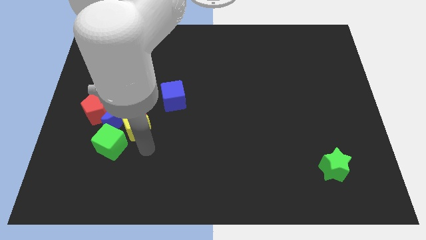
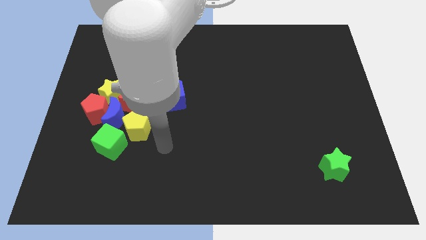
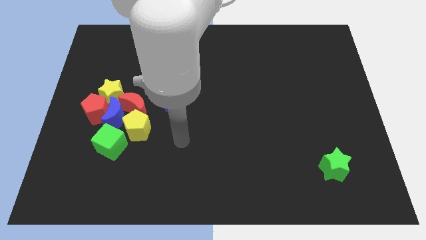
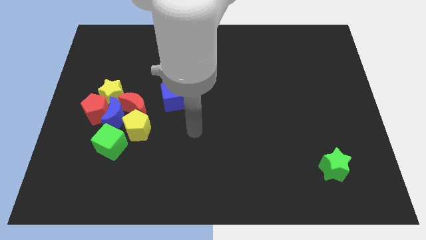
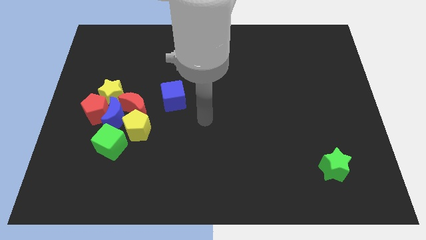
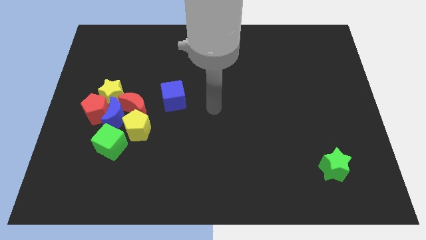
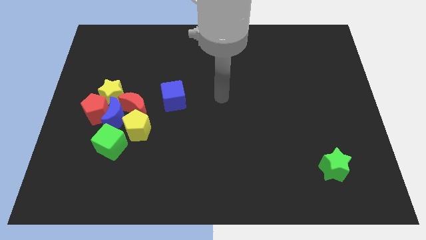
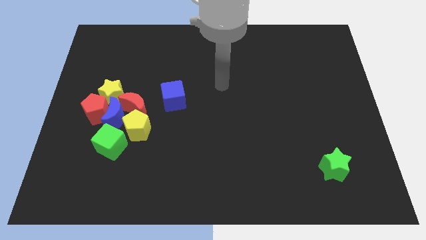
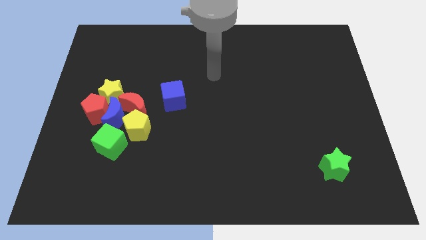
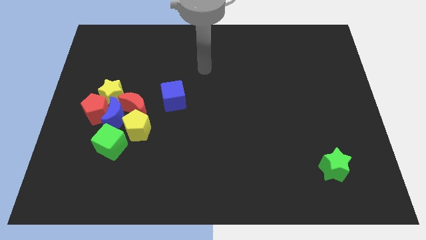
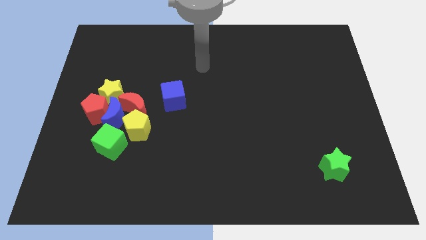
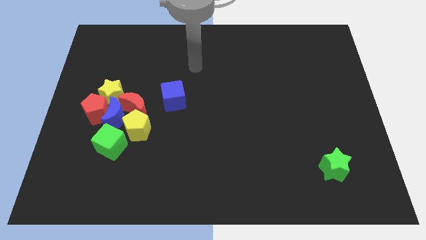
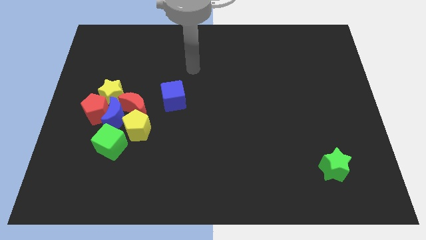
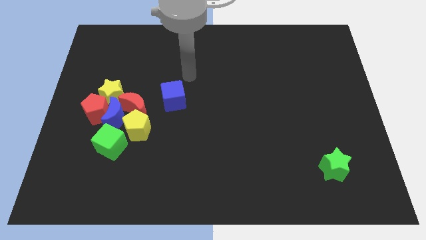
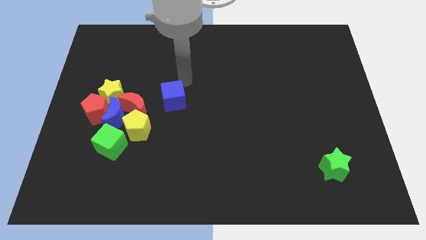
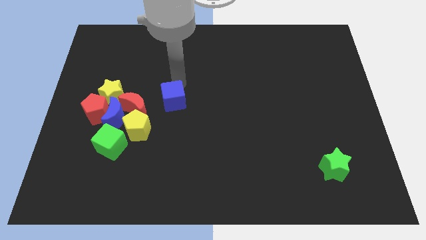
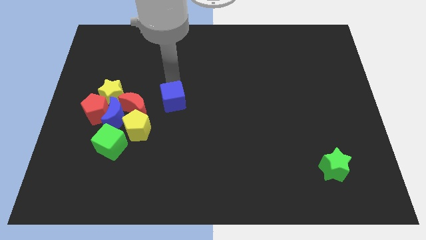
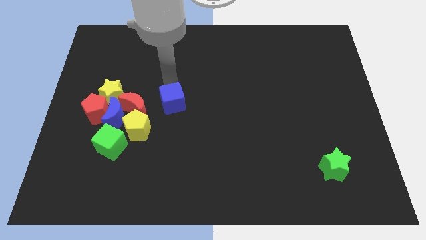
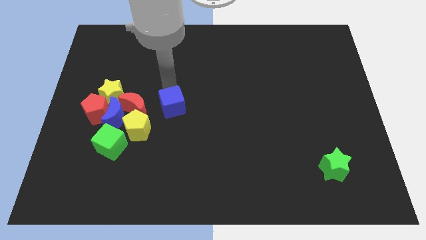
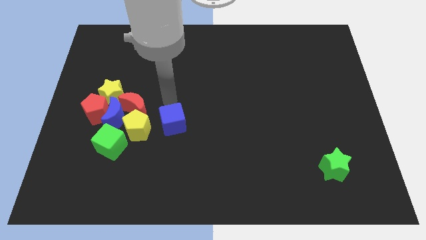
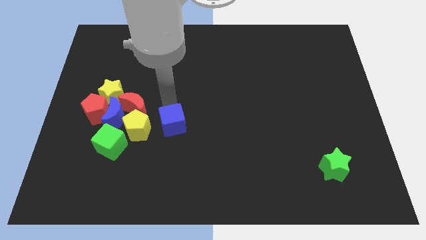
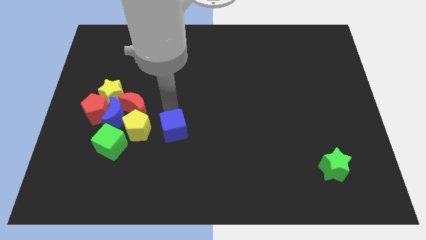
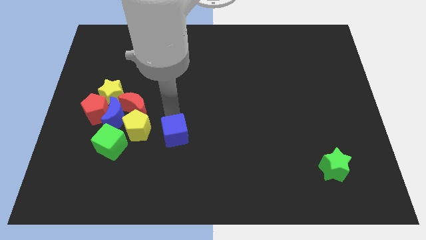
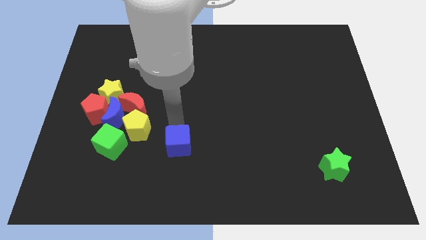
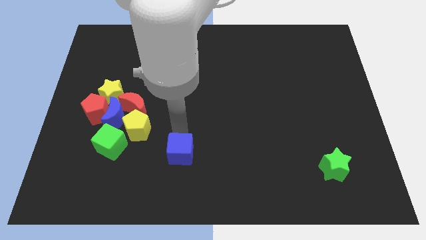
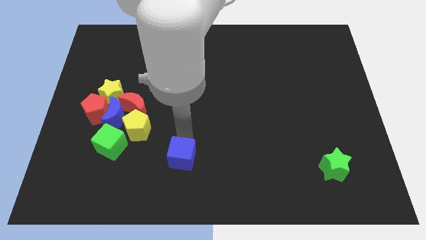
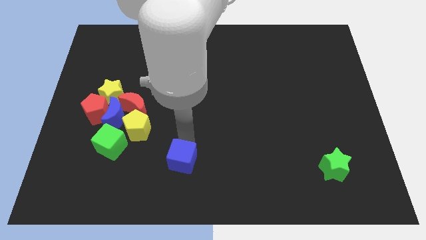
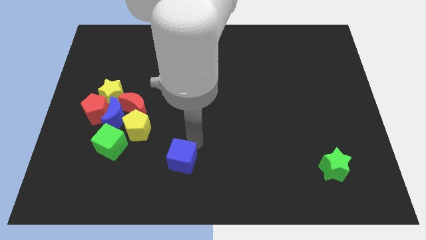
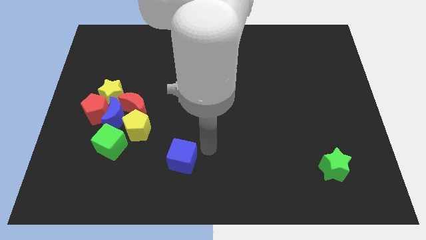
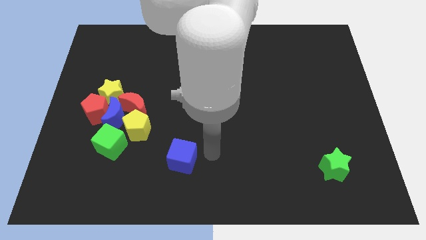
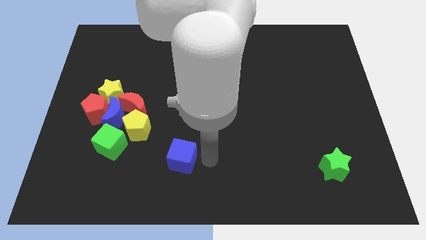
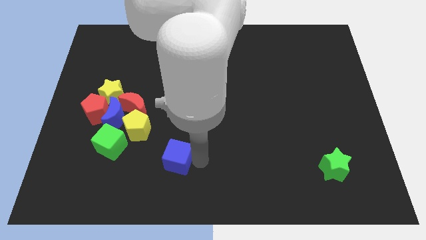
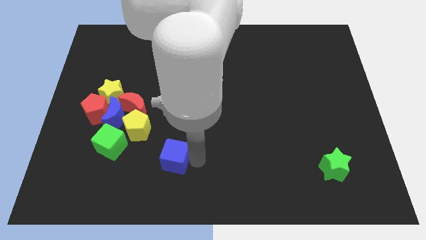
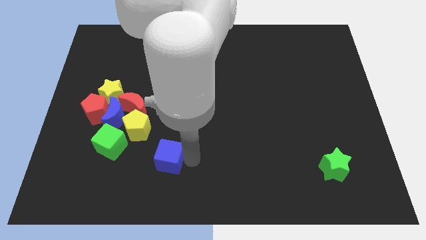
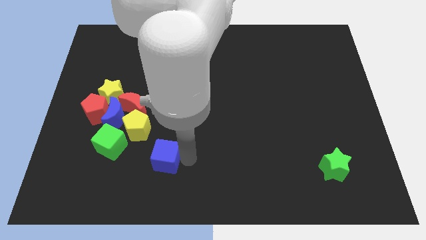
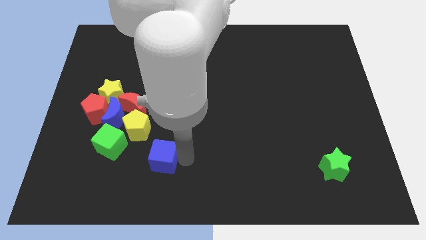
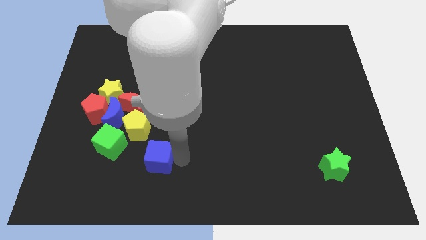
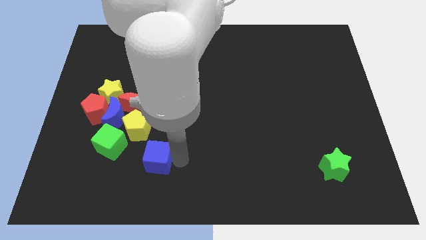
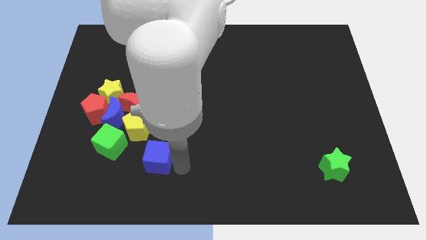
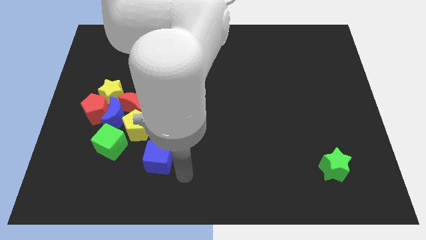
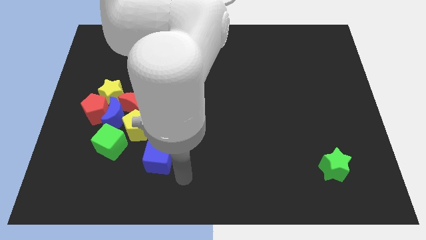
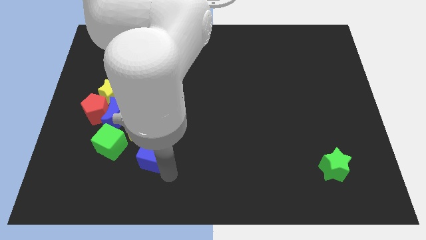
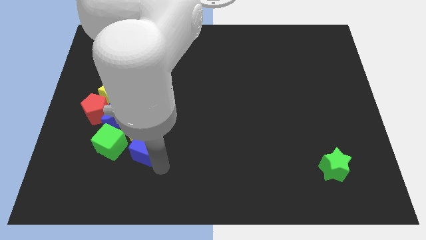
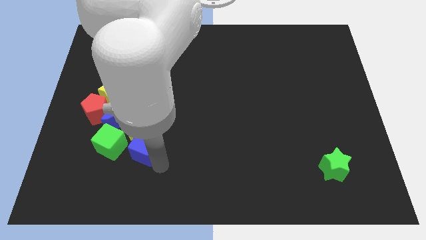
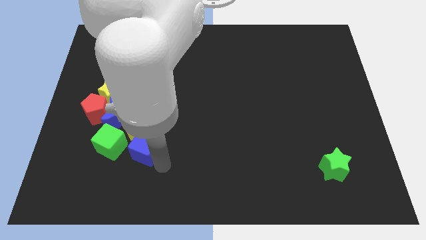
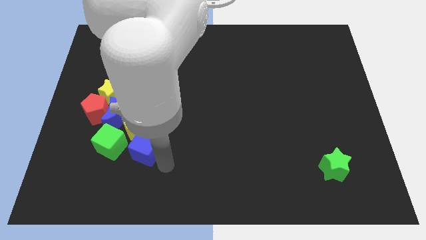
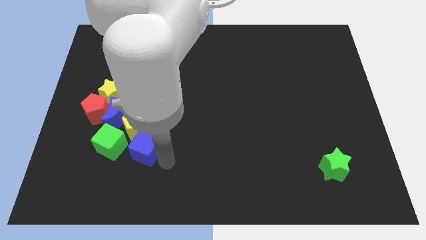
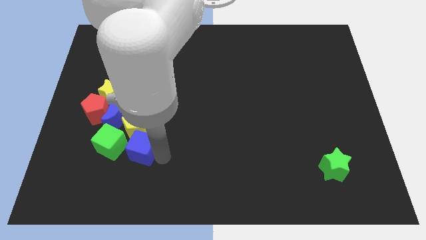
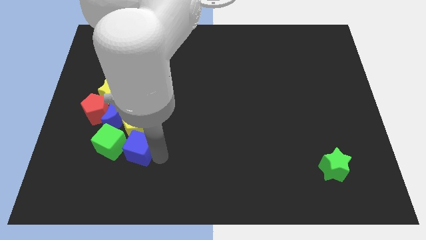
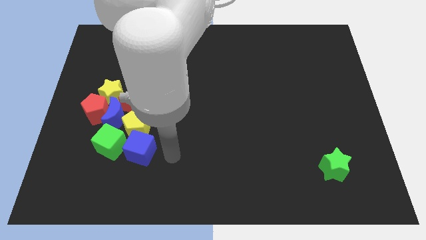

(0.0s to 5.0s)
push the blue cube into the bottom side of the yellow pentagon

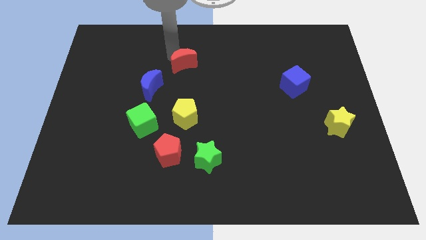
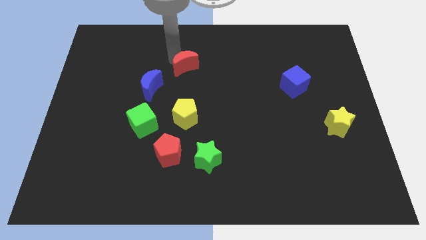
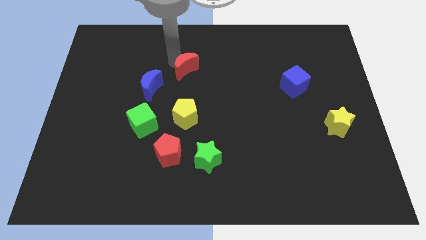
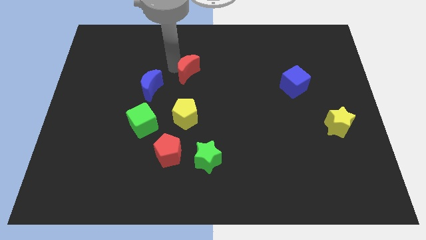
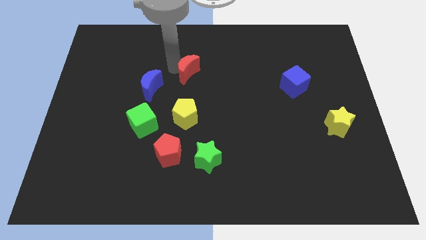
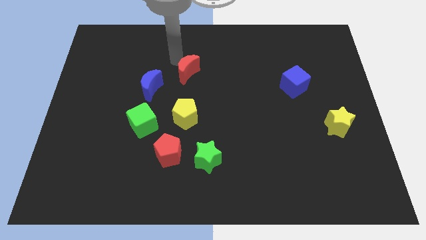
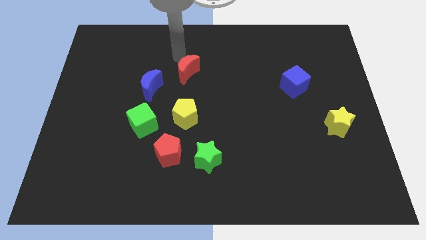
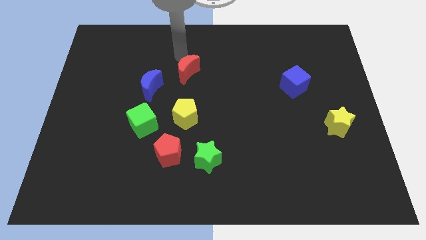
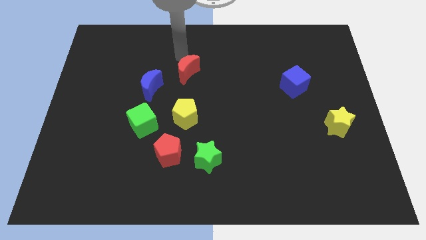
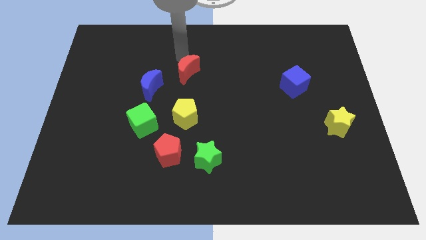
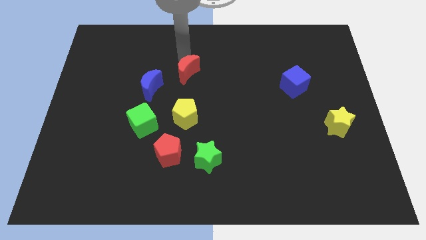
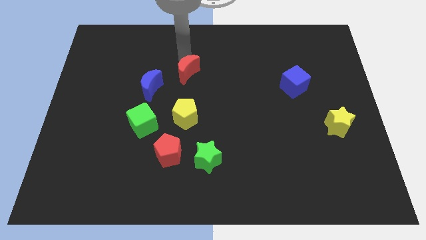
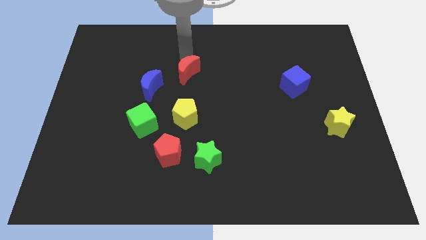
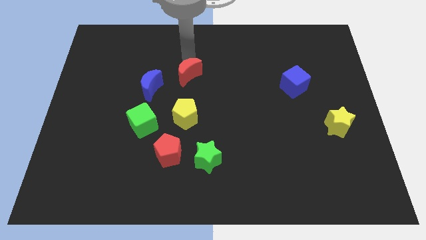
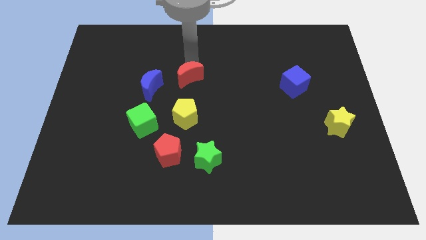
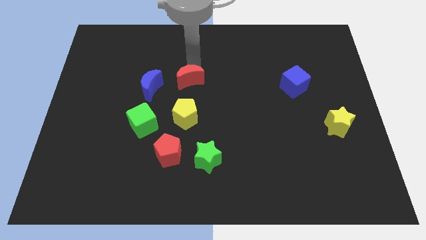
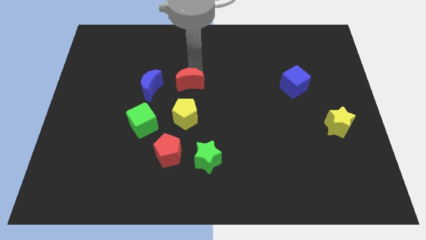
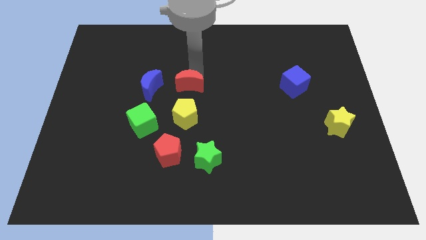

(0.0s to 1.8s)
push the red crescent slightly towards down

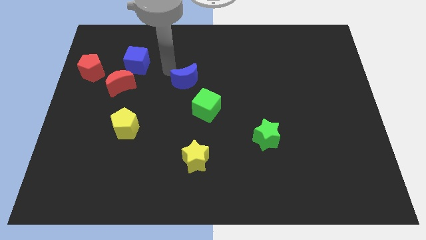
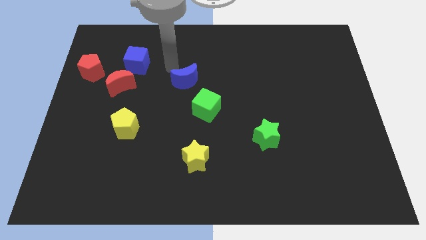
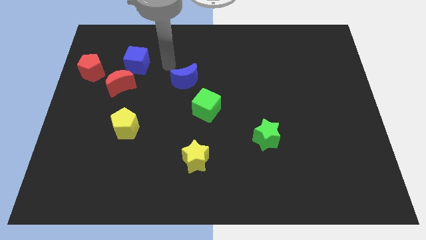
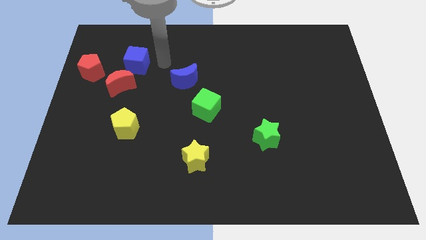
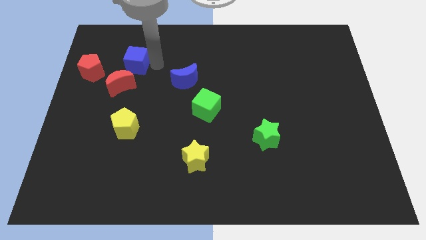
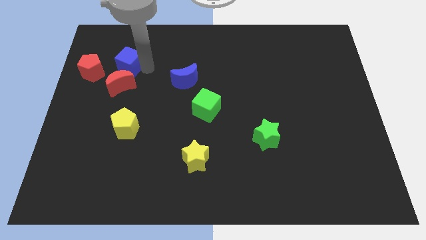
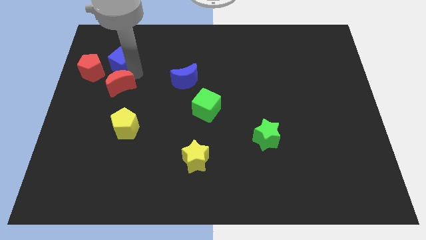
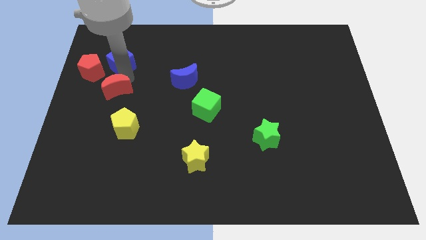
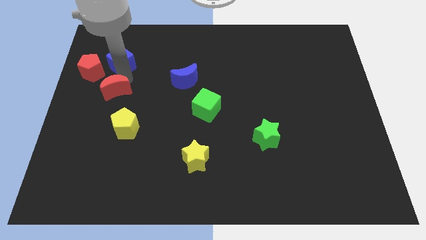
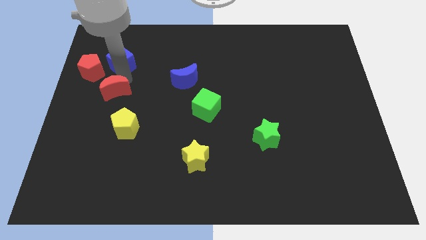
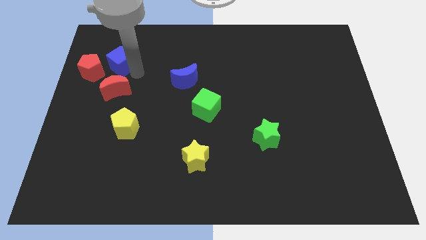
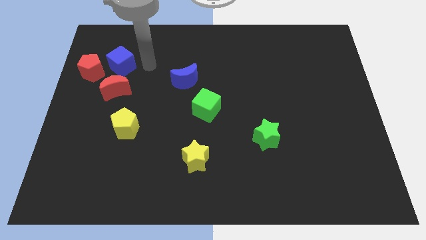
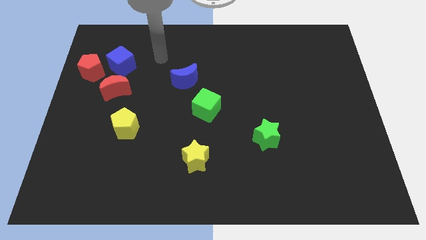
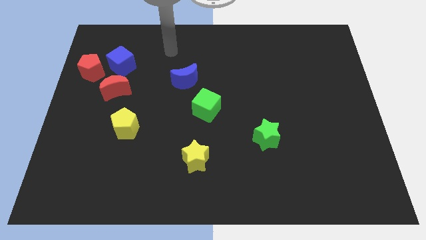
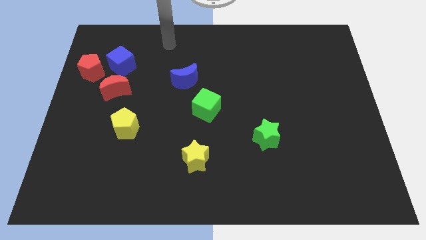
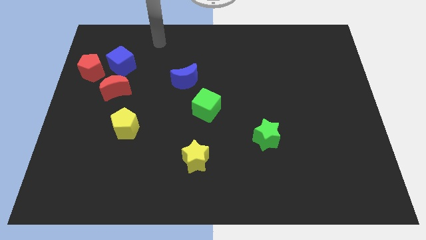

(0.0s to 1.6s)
push the blue cube vertically above the red moon

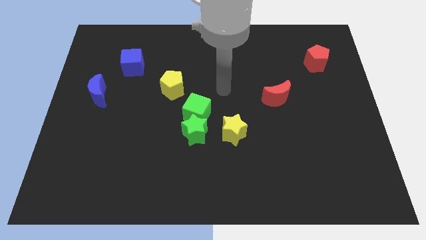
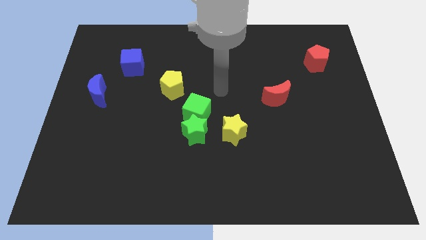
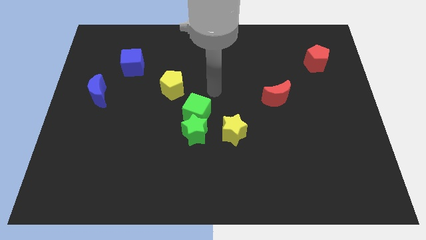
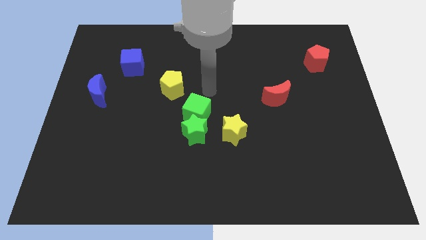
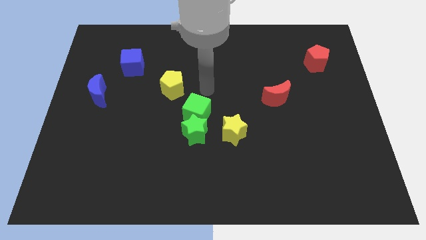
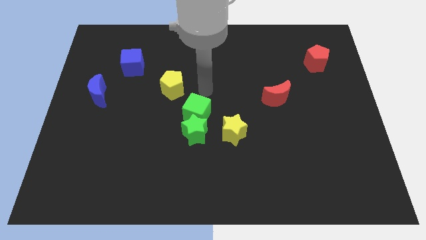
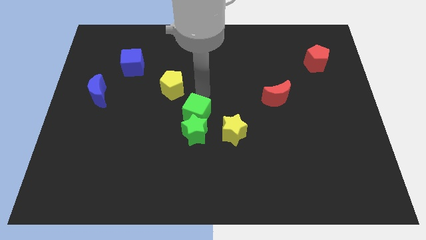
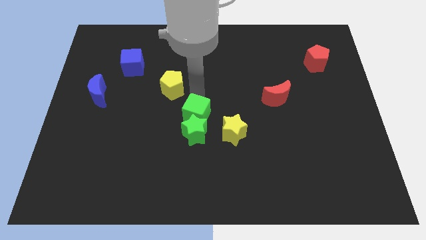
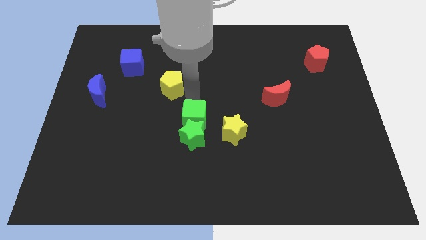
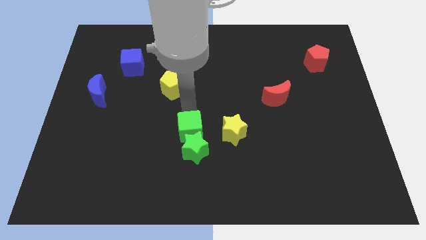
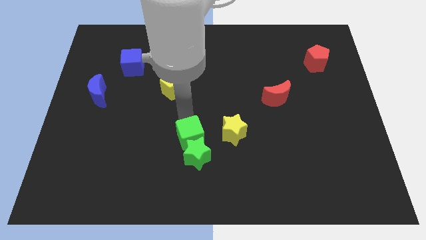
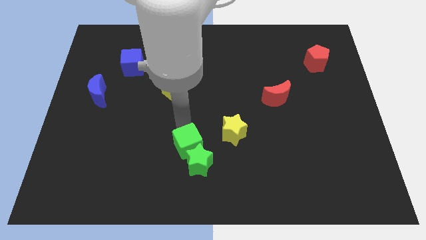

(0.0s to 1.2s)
push green blocks downwards
